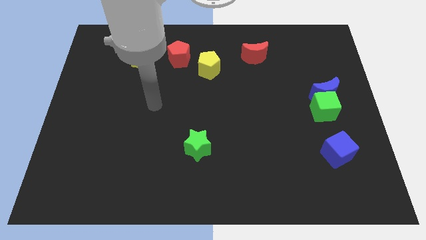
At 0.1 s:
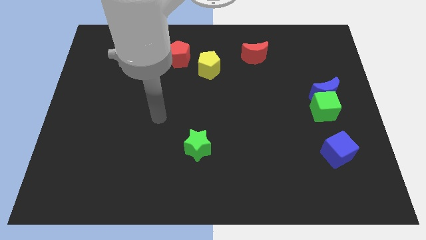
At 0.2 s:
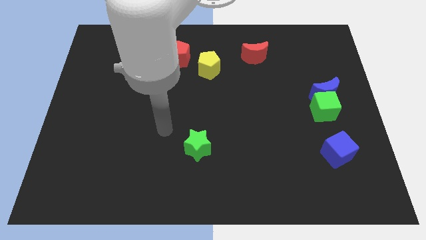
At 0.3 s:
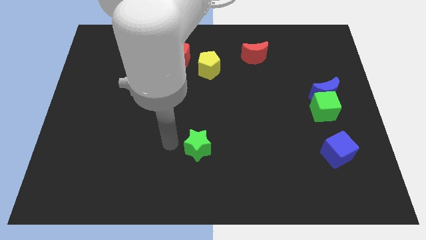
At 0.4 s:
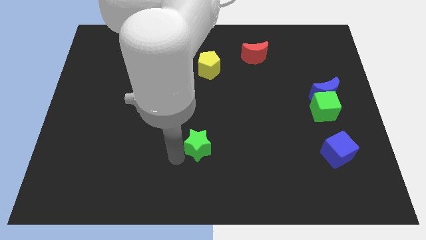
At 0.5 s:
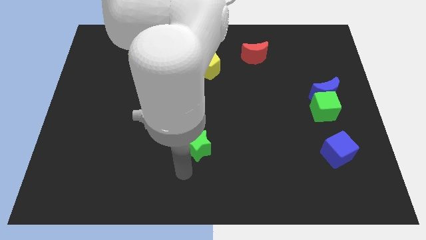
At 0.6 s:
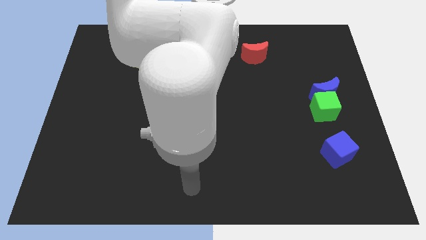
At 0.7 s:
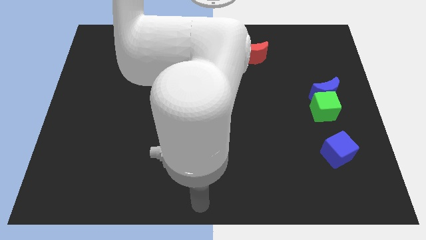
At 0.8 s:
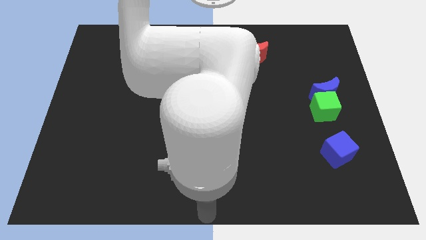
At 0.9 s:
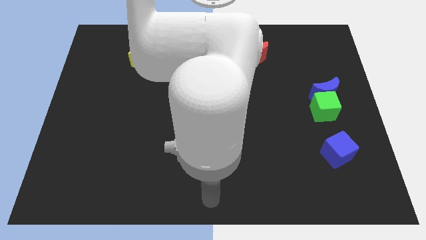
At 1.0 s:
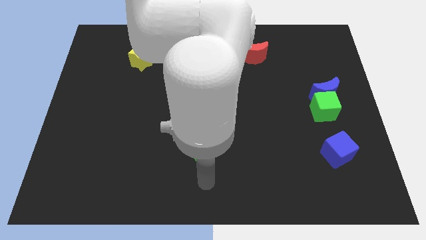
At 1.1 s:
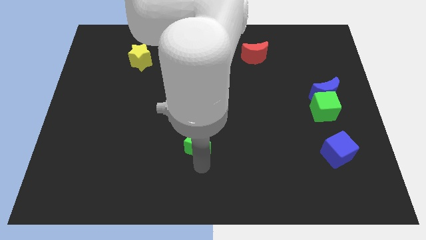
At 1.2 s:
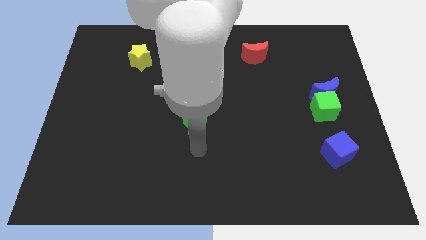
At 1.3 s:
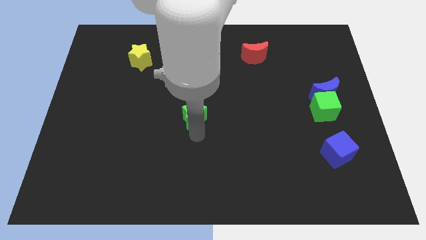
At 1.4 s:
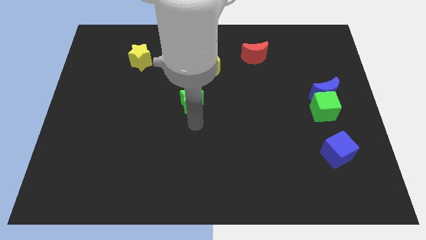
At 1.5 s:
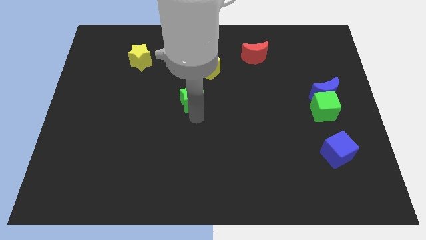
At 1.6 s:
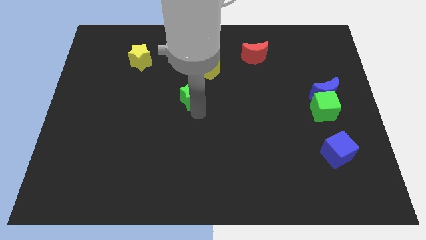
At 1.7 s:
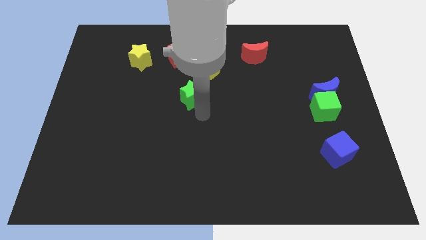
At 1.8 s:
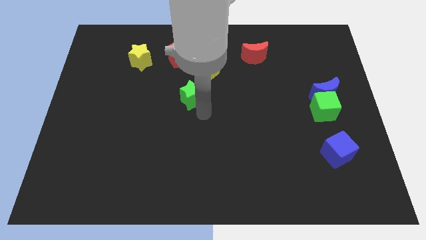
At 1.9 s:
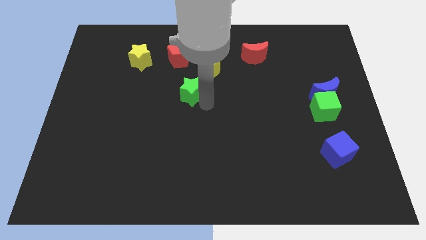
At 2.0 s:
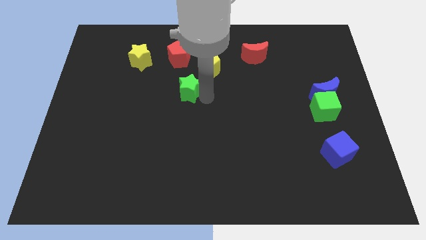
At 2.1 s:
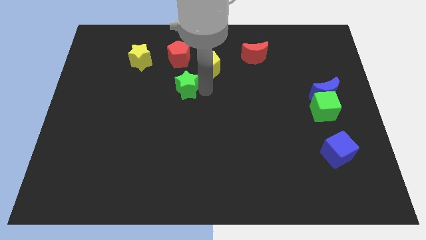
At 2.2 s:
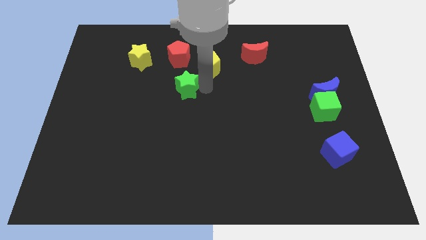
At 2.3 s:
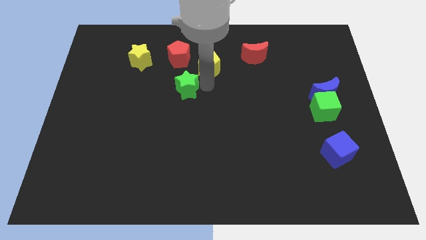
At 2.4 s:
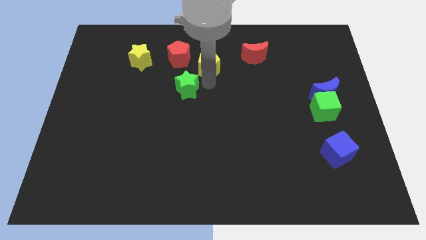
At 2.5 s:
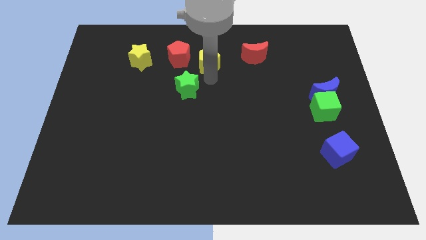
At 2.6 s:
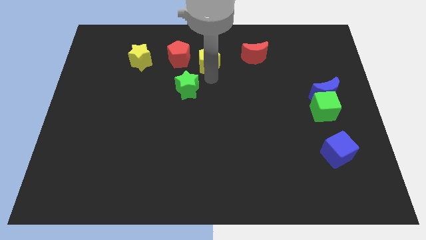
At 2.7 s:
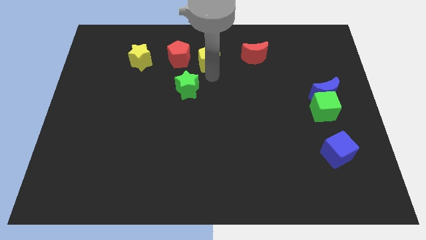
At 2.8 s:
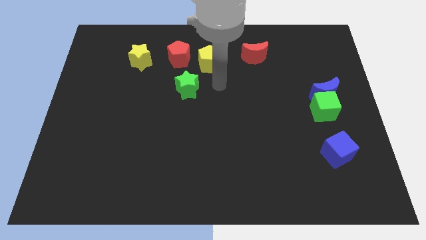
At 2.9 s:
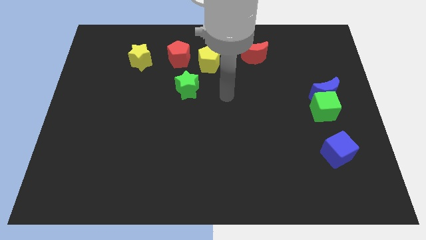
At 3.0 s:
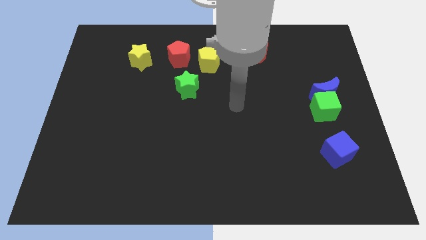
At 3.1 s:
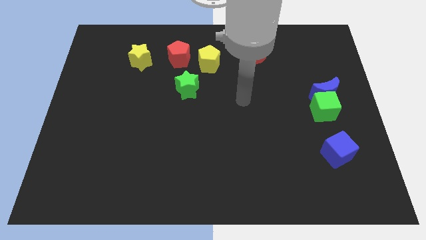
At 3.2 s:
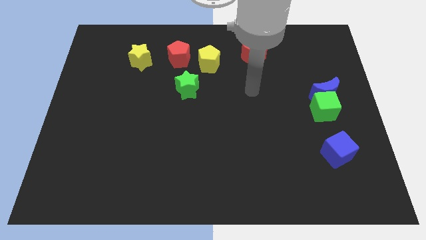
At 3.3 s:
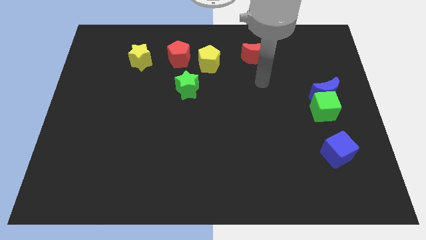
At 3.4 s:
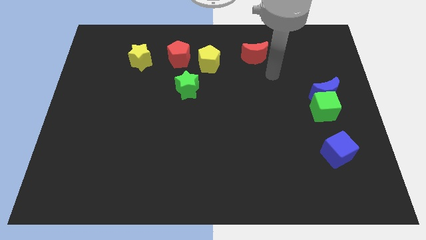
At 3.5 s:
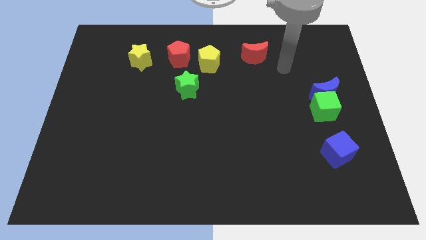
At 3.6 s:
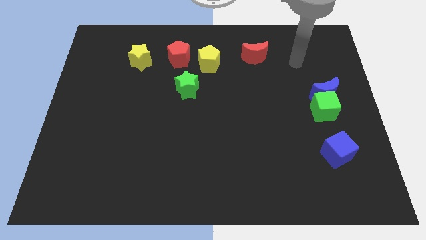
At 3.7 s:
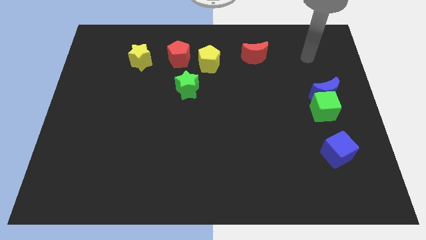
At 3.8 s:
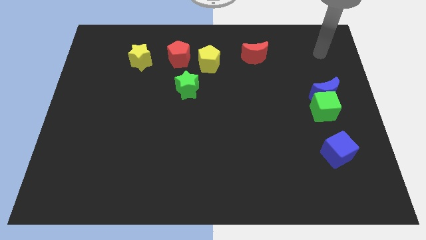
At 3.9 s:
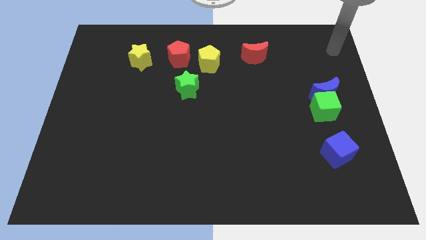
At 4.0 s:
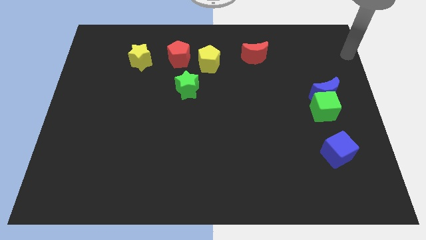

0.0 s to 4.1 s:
place the green star towards the bottom right side of the red pentagon

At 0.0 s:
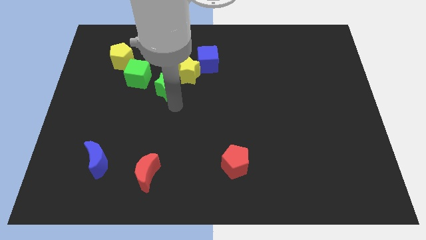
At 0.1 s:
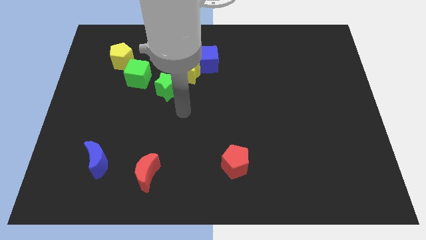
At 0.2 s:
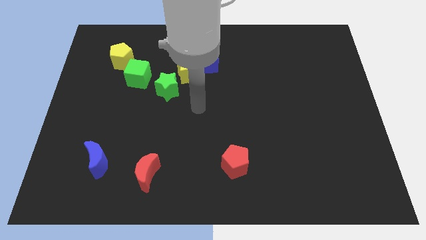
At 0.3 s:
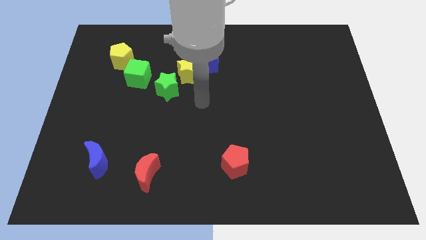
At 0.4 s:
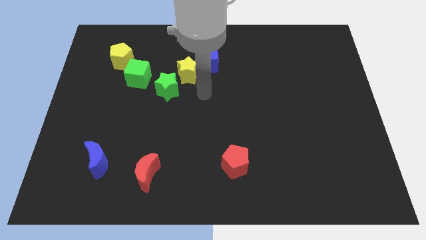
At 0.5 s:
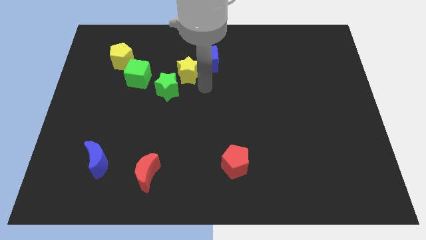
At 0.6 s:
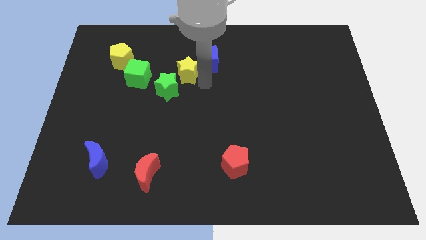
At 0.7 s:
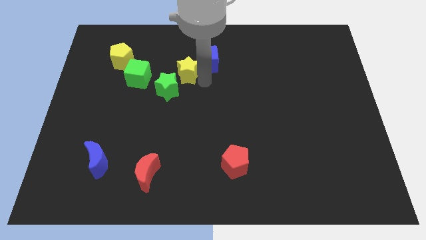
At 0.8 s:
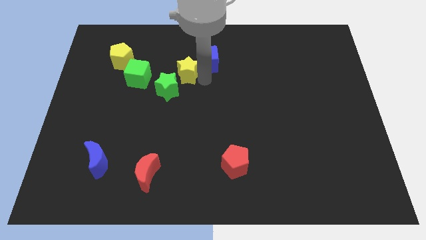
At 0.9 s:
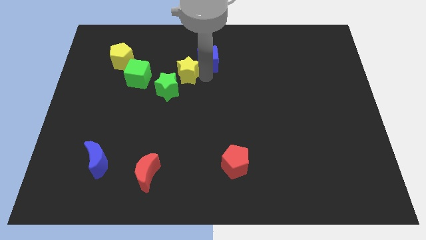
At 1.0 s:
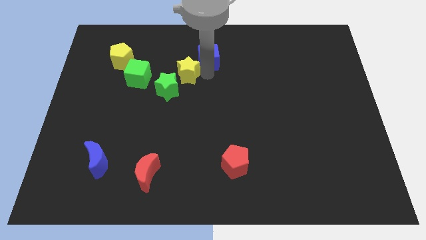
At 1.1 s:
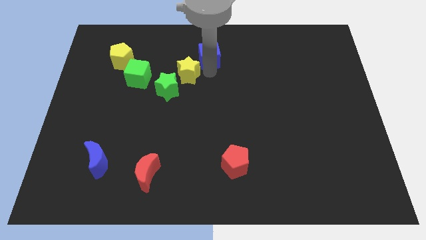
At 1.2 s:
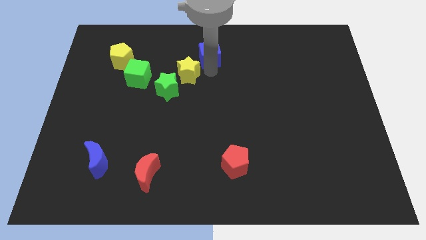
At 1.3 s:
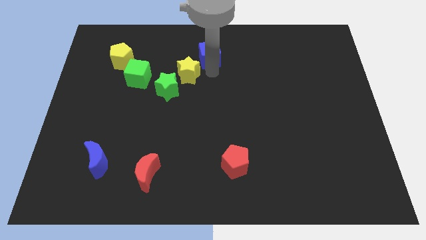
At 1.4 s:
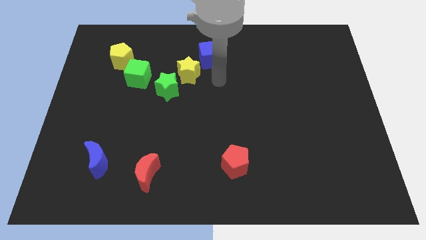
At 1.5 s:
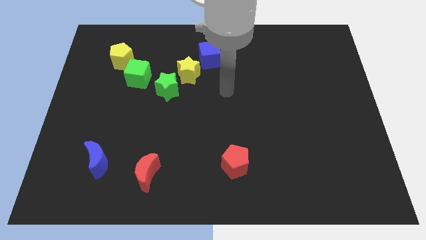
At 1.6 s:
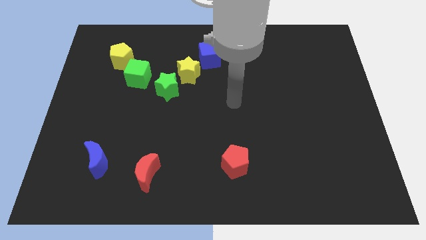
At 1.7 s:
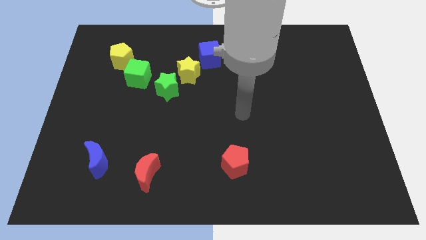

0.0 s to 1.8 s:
slightly push the blue cube upwards

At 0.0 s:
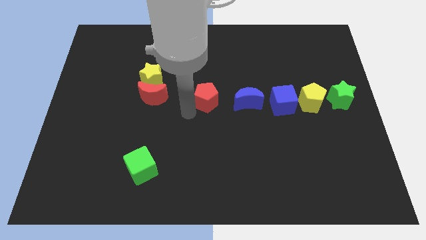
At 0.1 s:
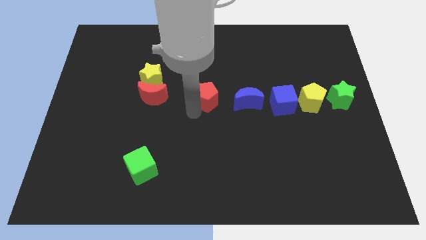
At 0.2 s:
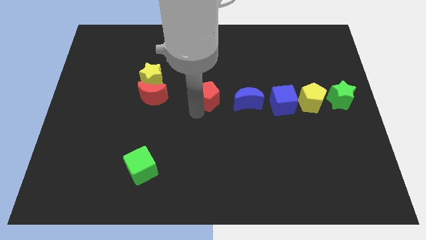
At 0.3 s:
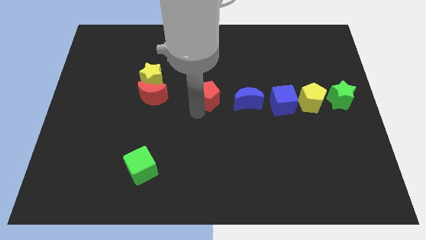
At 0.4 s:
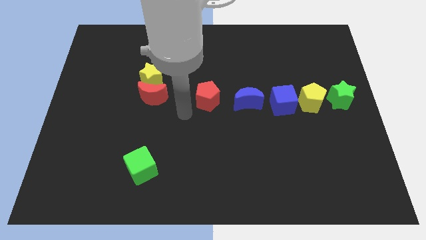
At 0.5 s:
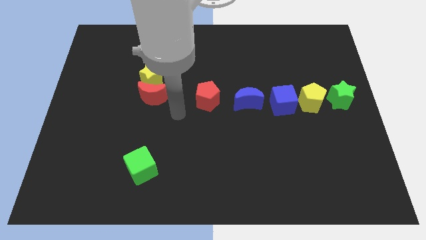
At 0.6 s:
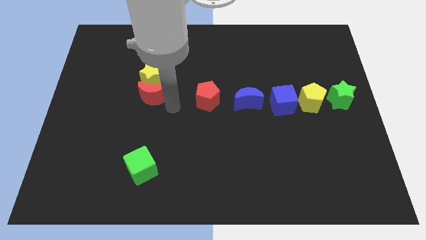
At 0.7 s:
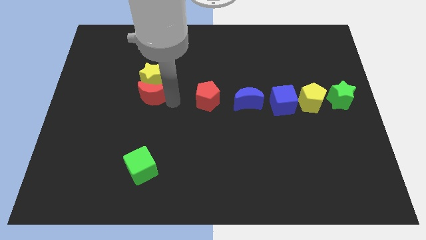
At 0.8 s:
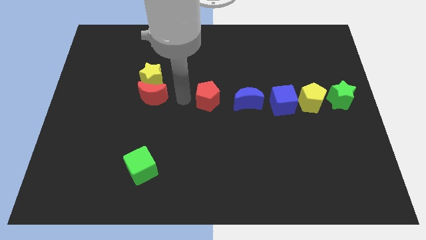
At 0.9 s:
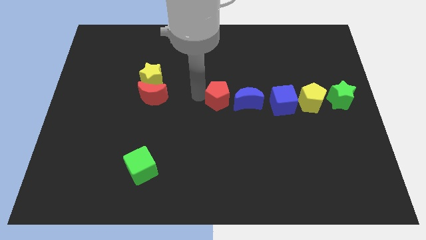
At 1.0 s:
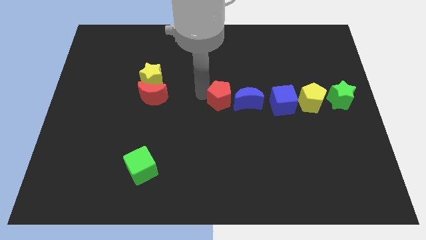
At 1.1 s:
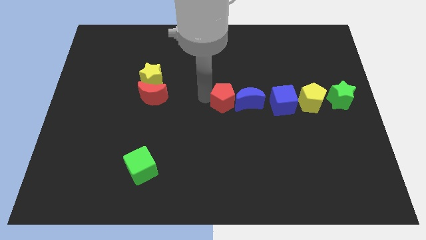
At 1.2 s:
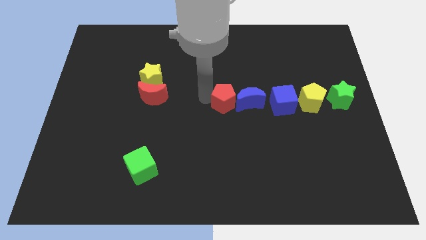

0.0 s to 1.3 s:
push the red pentagon into blue crescent

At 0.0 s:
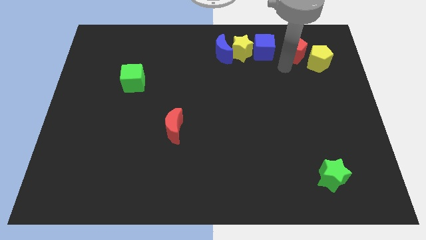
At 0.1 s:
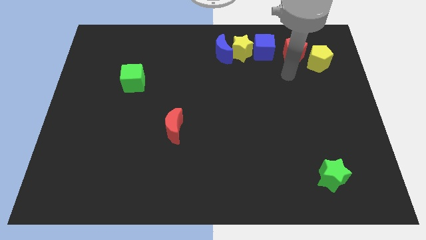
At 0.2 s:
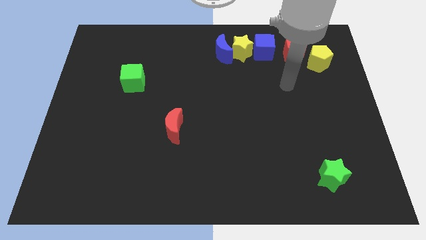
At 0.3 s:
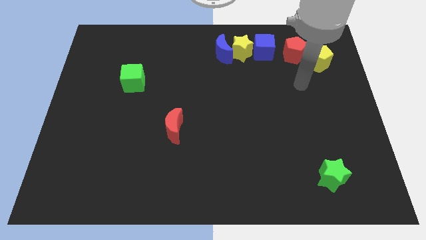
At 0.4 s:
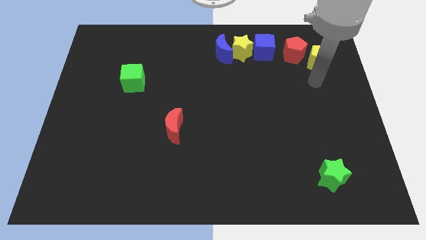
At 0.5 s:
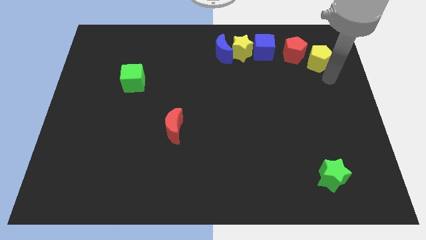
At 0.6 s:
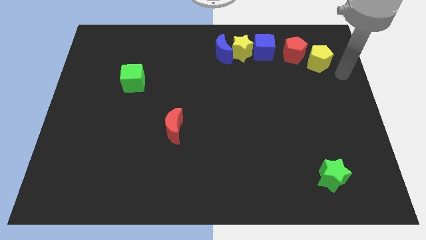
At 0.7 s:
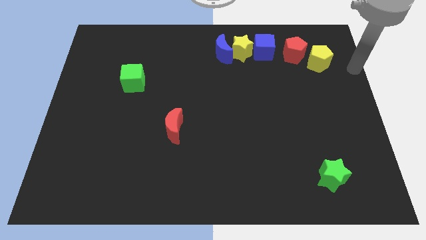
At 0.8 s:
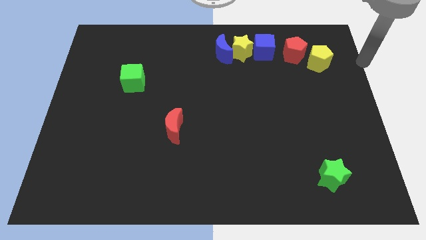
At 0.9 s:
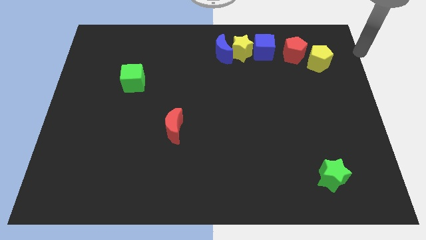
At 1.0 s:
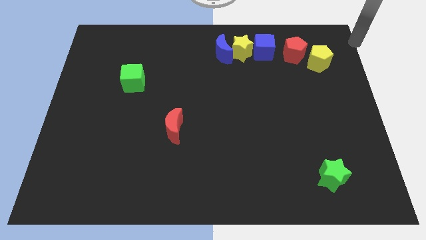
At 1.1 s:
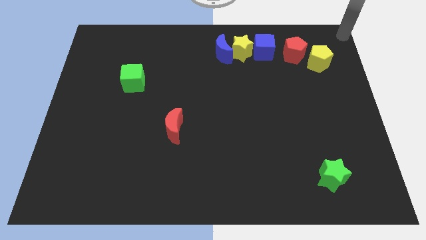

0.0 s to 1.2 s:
move your arm to the top right corner of the board

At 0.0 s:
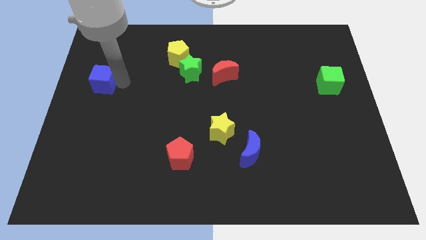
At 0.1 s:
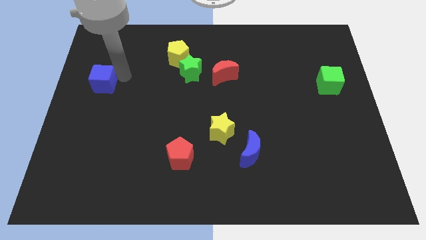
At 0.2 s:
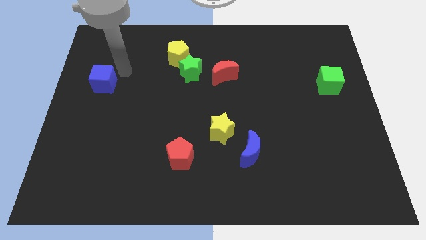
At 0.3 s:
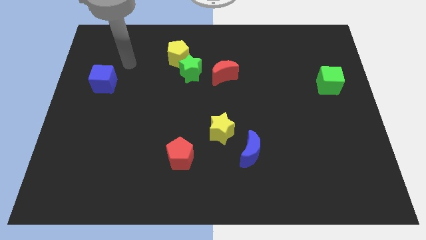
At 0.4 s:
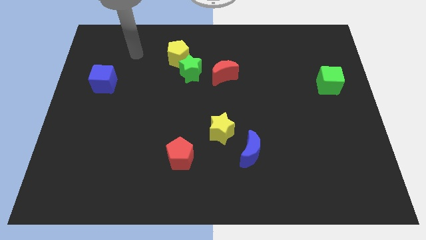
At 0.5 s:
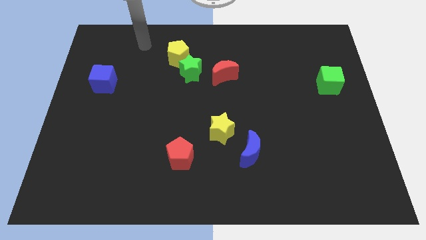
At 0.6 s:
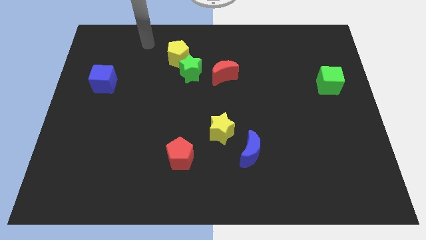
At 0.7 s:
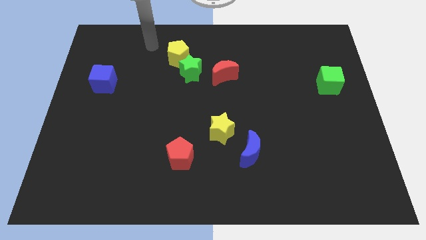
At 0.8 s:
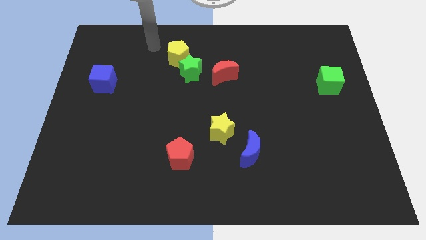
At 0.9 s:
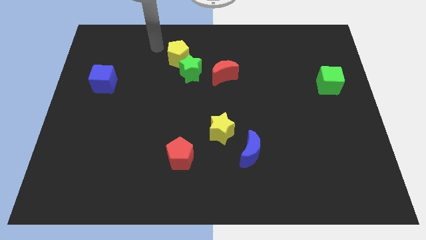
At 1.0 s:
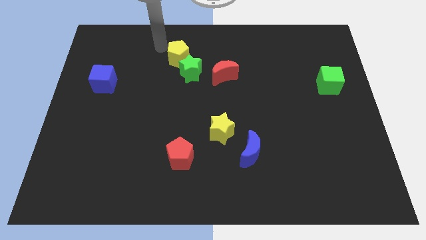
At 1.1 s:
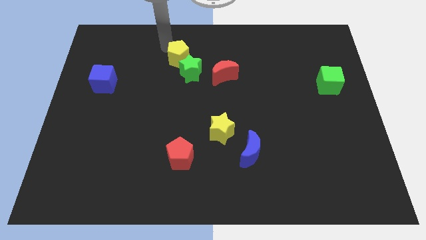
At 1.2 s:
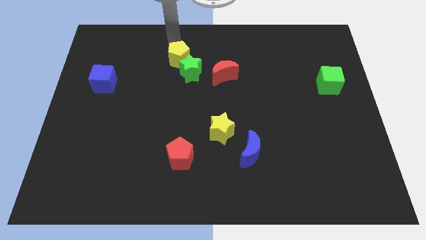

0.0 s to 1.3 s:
place your arm to the top of yellow pentagon
